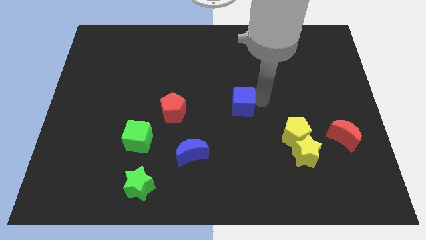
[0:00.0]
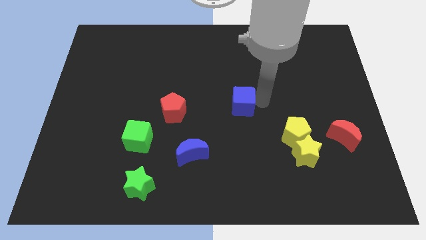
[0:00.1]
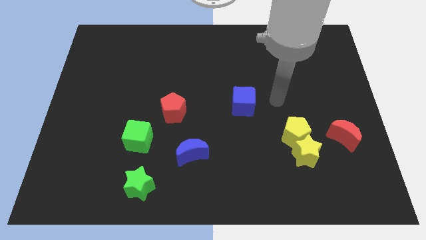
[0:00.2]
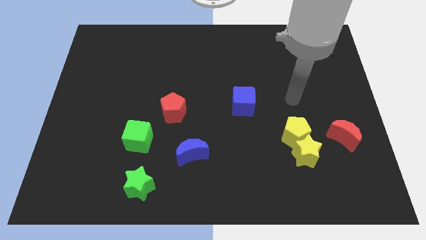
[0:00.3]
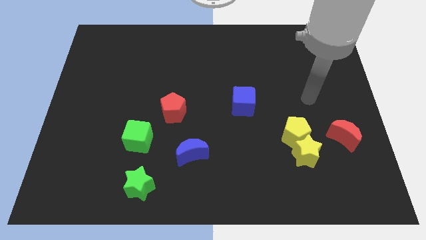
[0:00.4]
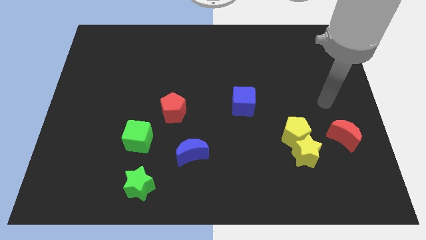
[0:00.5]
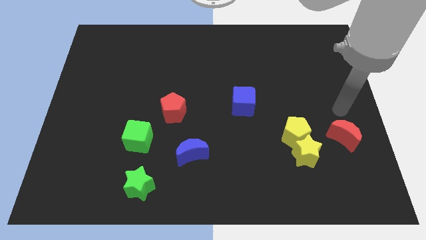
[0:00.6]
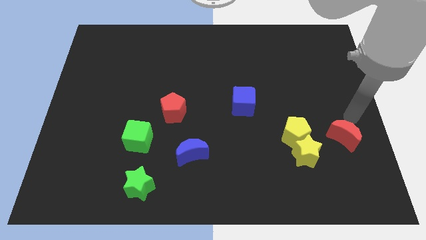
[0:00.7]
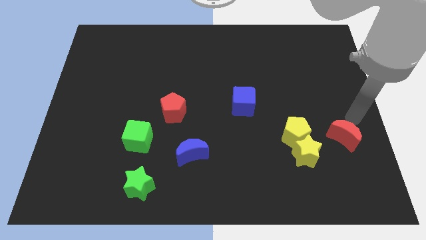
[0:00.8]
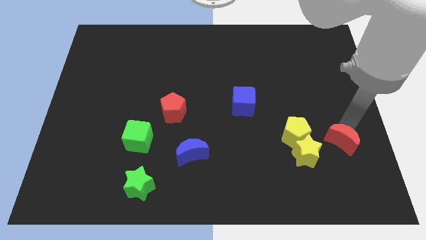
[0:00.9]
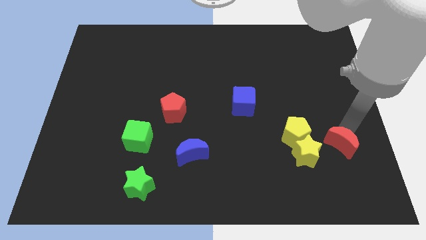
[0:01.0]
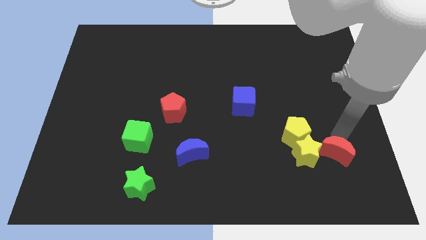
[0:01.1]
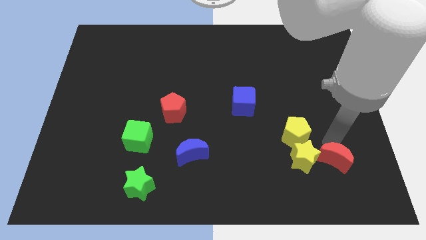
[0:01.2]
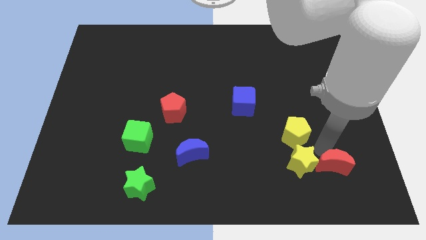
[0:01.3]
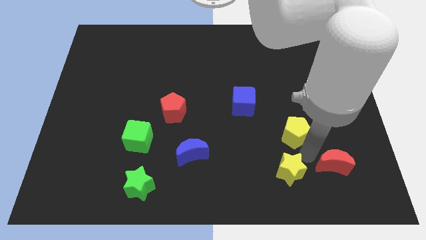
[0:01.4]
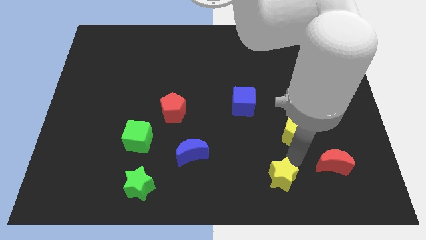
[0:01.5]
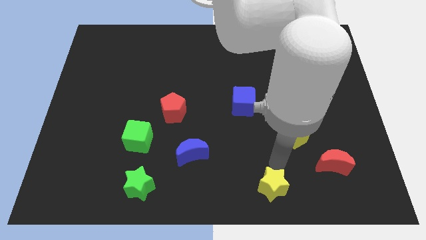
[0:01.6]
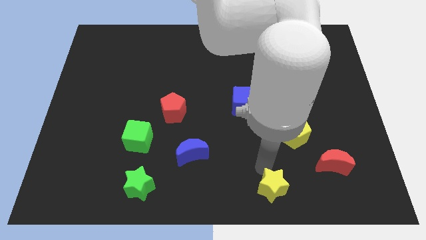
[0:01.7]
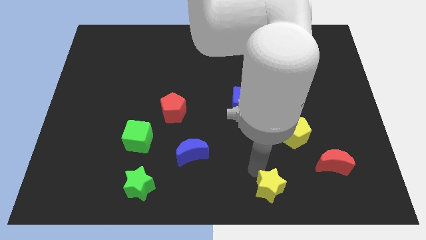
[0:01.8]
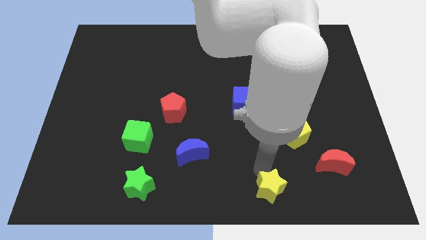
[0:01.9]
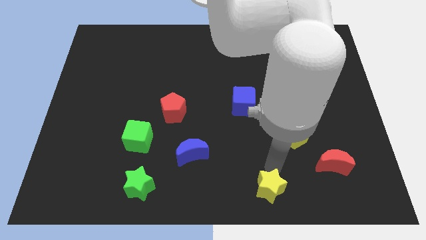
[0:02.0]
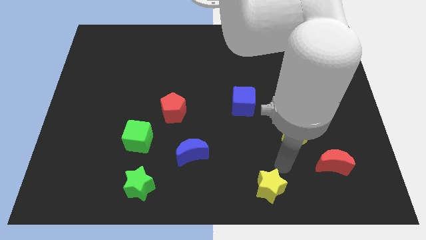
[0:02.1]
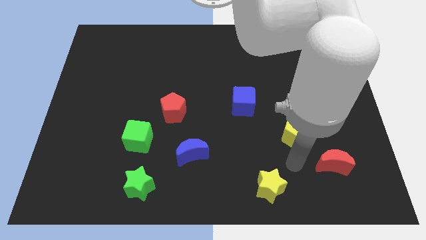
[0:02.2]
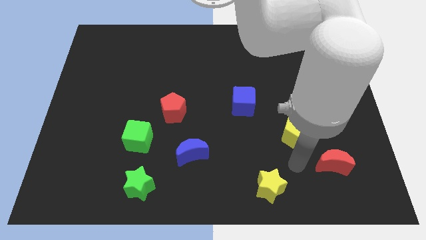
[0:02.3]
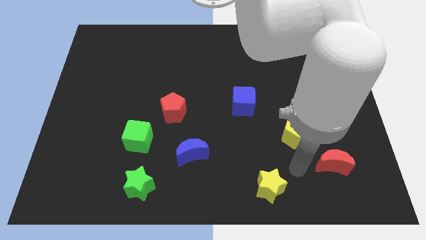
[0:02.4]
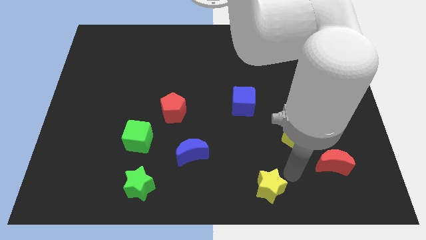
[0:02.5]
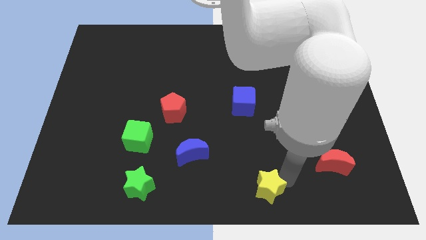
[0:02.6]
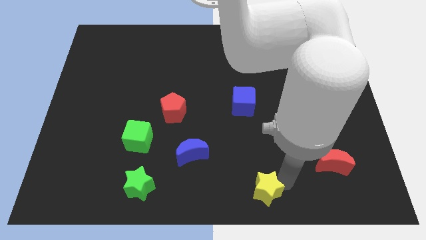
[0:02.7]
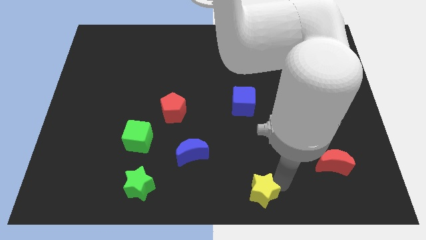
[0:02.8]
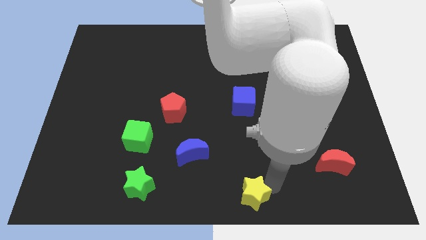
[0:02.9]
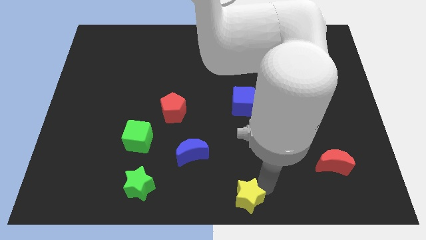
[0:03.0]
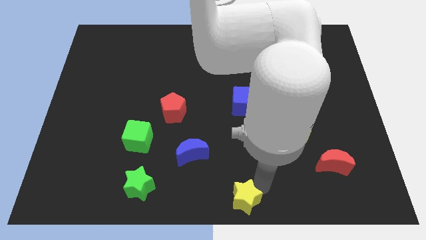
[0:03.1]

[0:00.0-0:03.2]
place yellow star vertically below blue cube

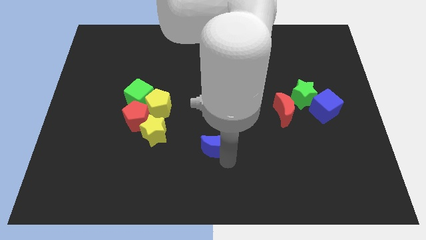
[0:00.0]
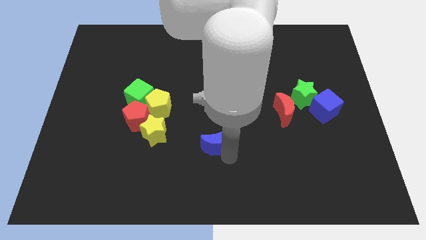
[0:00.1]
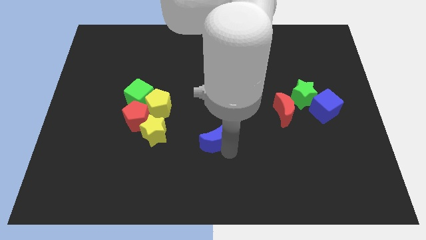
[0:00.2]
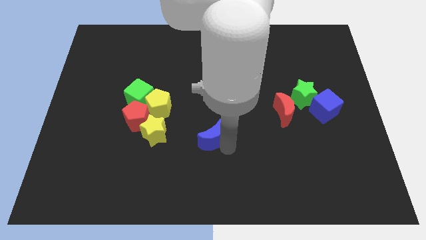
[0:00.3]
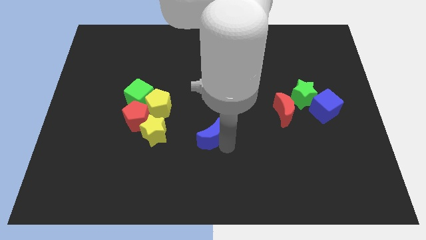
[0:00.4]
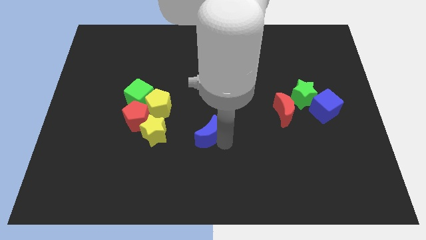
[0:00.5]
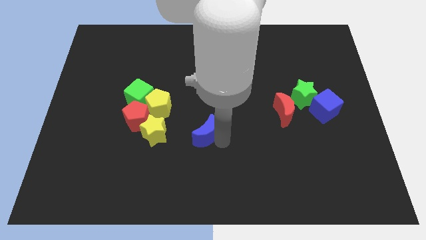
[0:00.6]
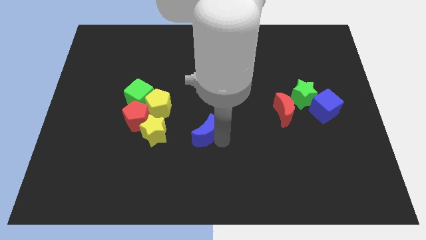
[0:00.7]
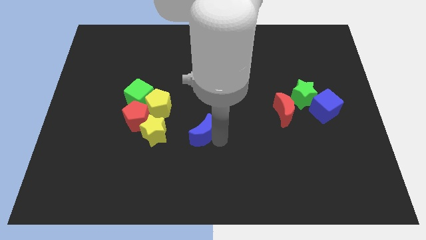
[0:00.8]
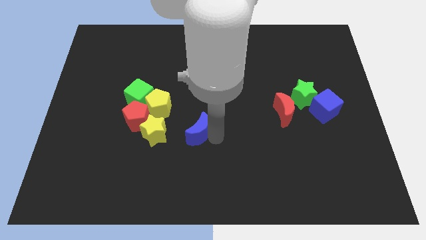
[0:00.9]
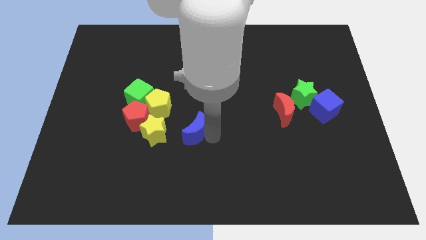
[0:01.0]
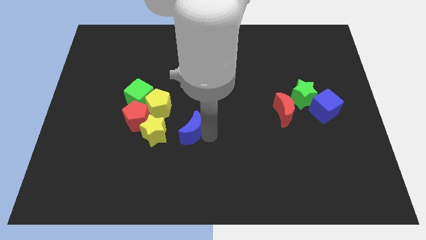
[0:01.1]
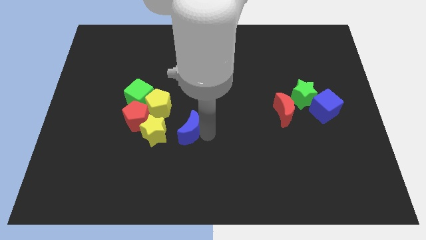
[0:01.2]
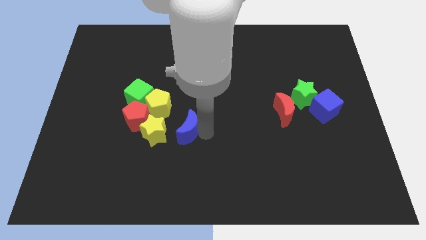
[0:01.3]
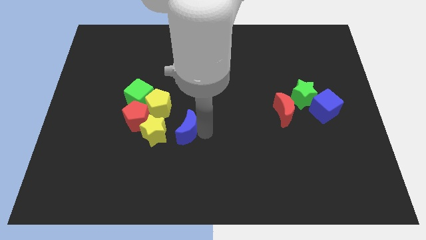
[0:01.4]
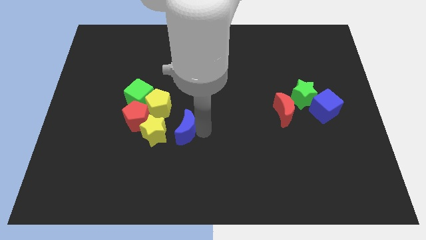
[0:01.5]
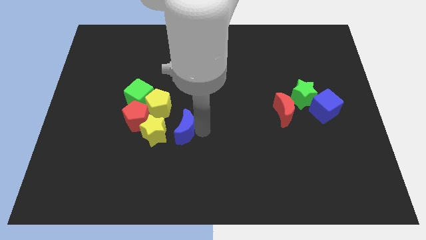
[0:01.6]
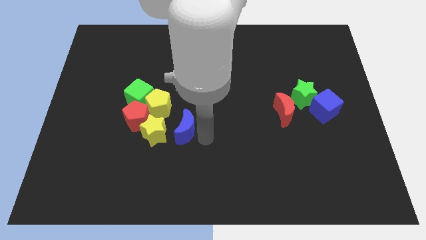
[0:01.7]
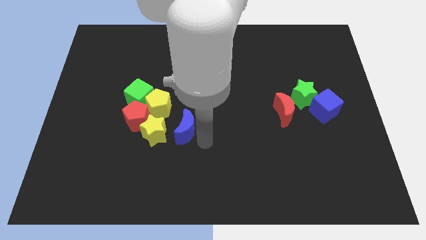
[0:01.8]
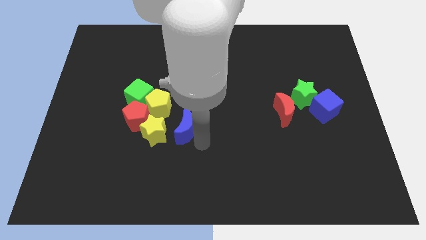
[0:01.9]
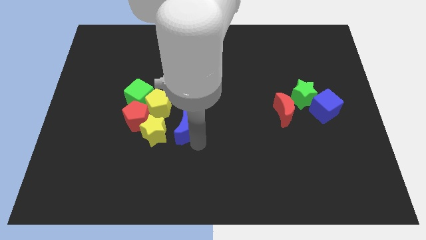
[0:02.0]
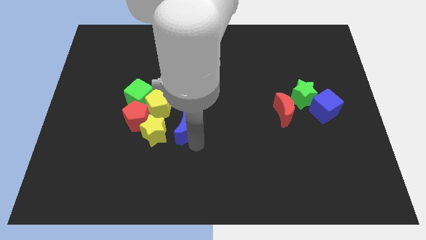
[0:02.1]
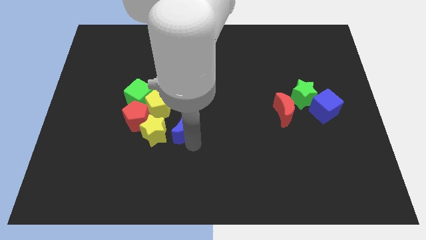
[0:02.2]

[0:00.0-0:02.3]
push the blue crescent towards the yellow star

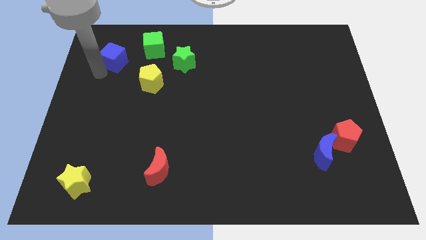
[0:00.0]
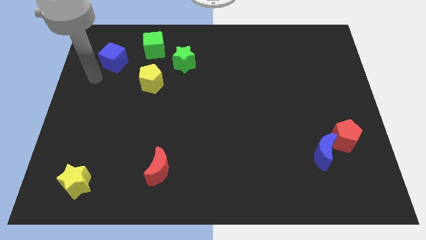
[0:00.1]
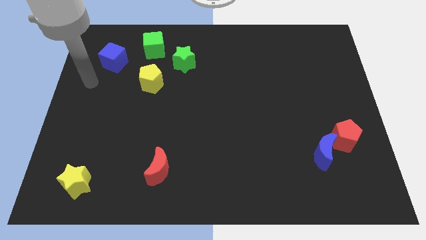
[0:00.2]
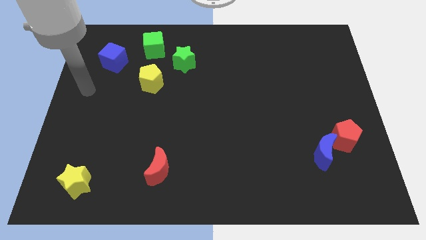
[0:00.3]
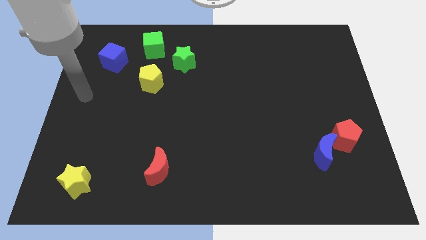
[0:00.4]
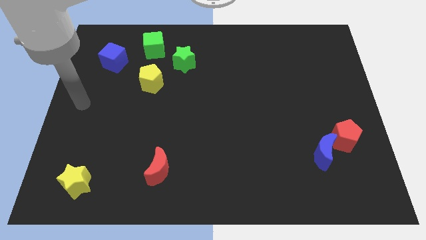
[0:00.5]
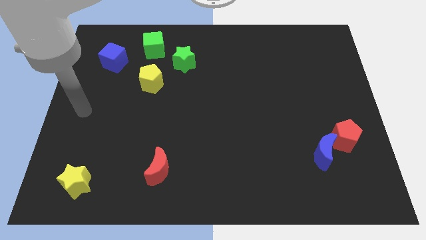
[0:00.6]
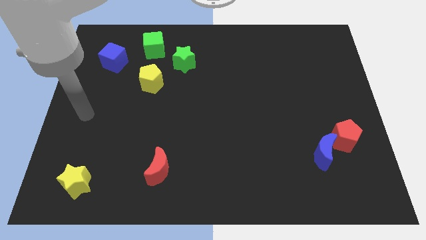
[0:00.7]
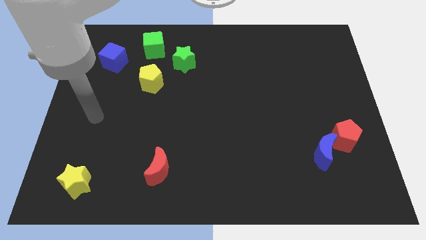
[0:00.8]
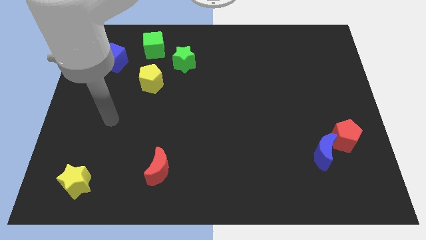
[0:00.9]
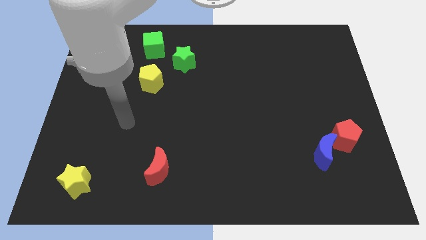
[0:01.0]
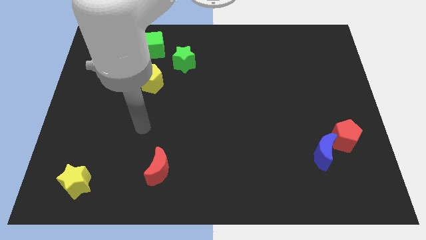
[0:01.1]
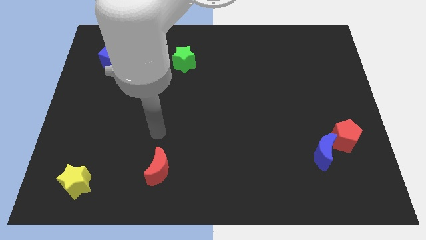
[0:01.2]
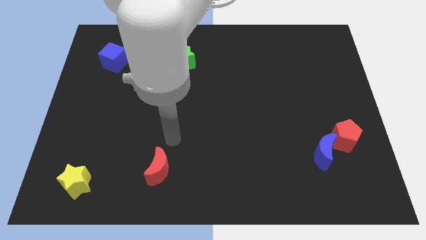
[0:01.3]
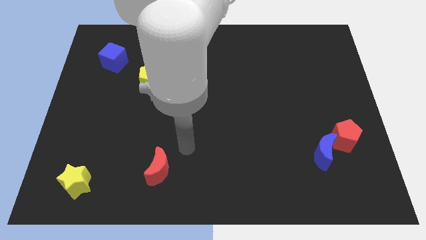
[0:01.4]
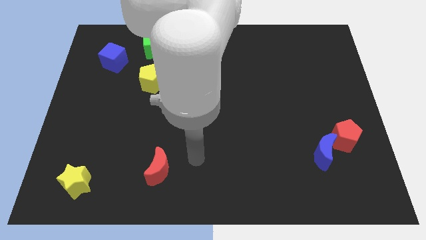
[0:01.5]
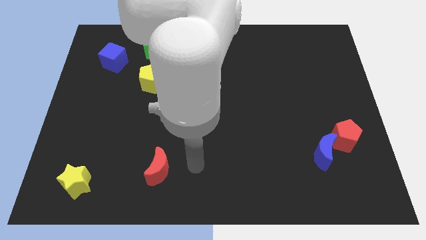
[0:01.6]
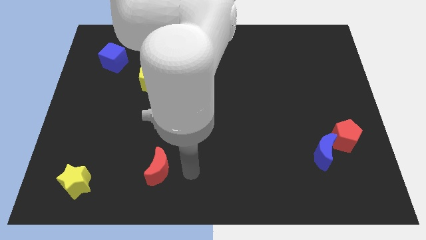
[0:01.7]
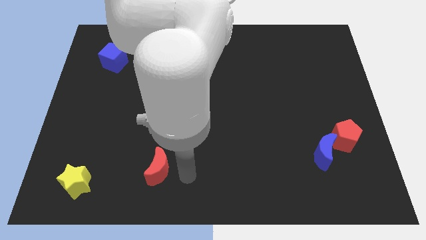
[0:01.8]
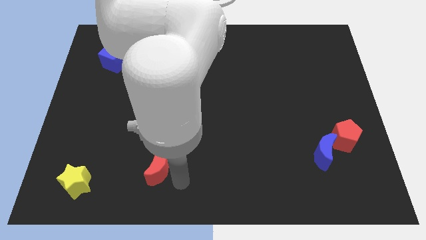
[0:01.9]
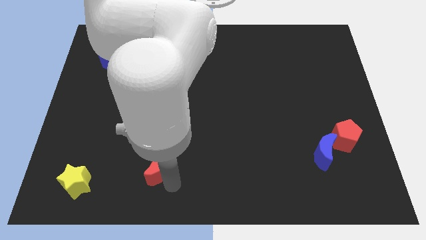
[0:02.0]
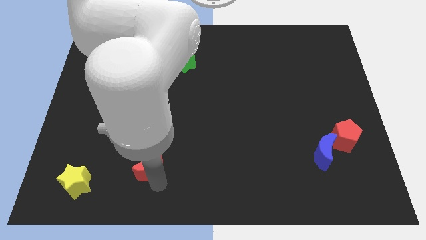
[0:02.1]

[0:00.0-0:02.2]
move your arm towards the red crescent

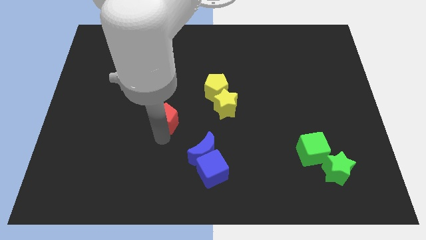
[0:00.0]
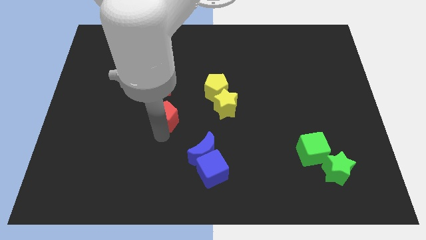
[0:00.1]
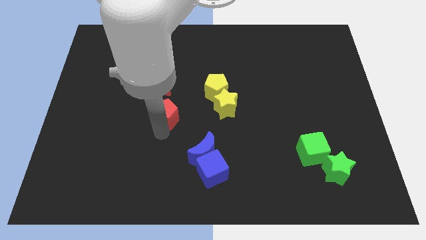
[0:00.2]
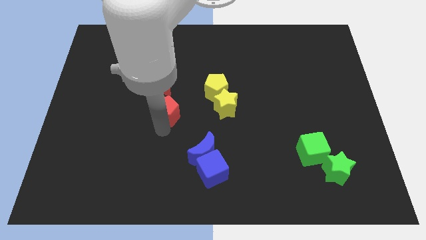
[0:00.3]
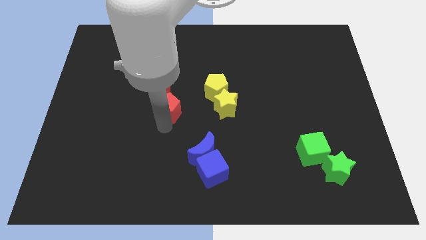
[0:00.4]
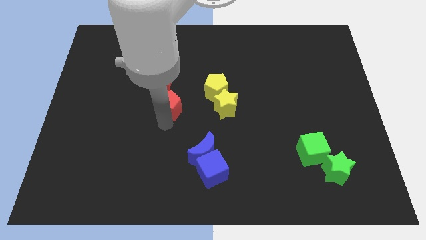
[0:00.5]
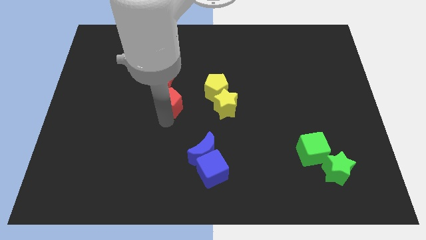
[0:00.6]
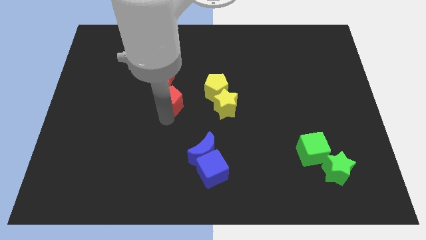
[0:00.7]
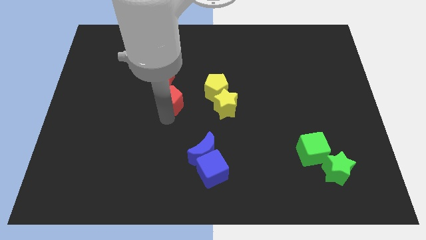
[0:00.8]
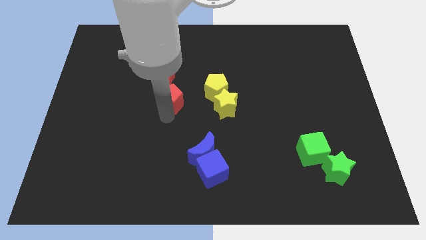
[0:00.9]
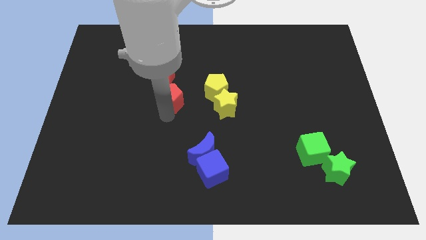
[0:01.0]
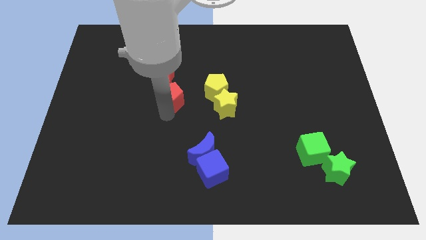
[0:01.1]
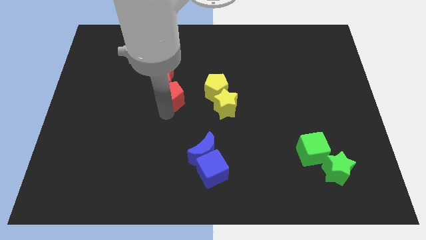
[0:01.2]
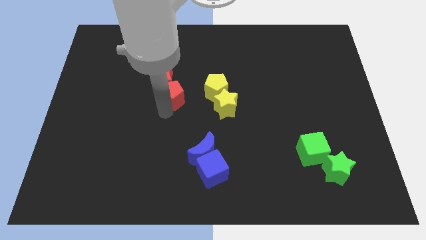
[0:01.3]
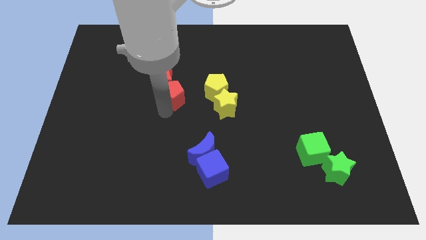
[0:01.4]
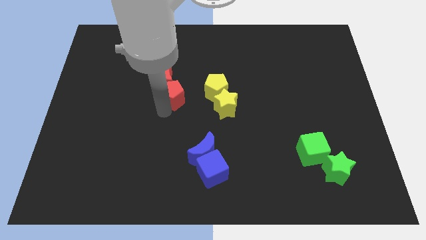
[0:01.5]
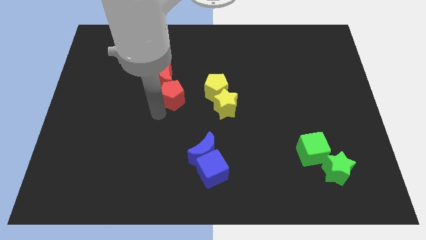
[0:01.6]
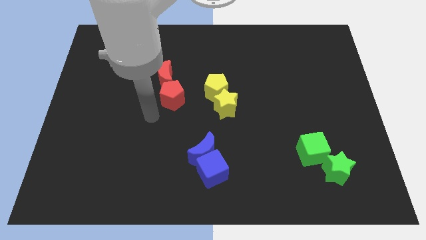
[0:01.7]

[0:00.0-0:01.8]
move the red pentagon into the red crescent
